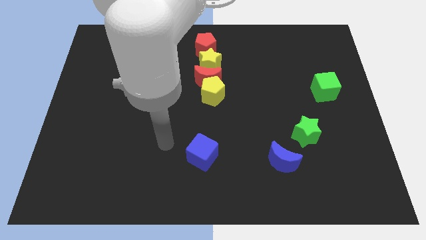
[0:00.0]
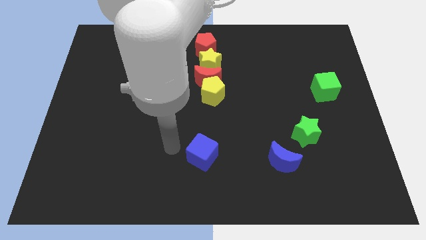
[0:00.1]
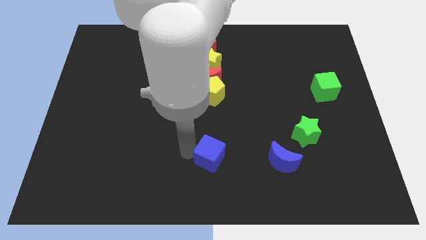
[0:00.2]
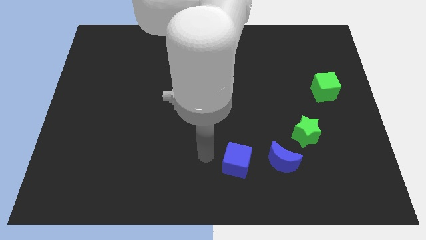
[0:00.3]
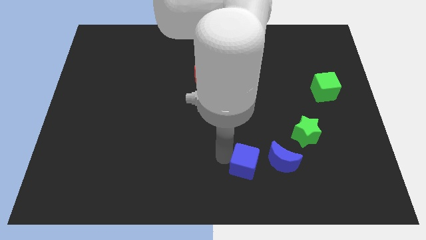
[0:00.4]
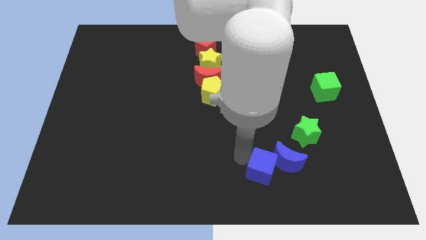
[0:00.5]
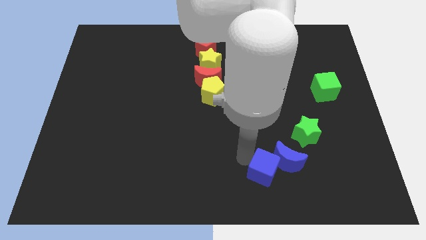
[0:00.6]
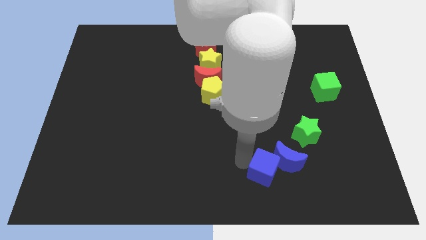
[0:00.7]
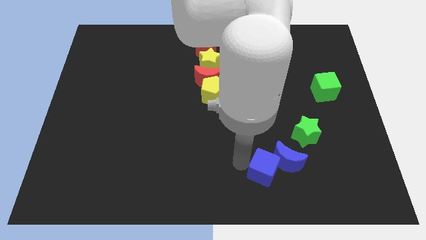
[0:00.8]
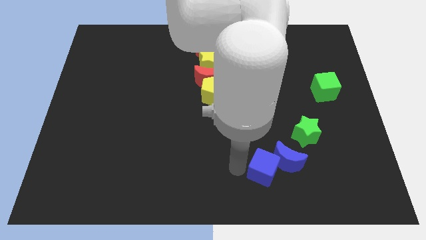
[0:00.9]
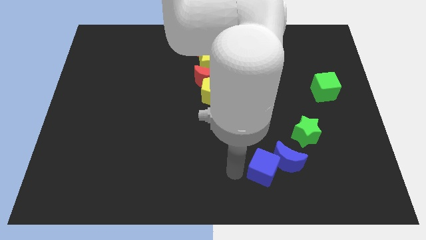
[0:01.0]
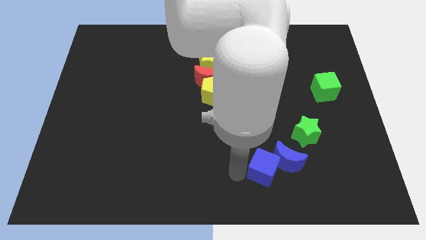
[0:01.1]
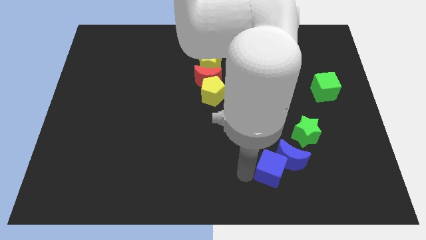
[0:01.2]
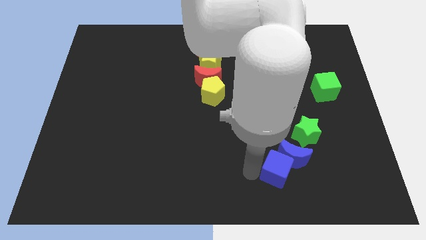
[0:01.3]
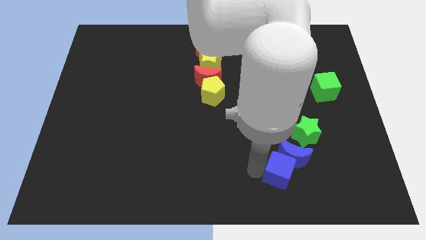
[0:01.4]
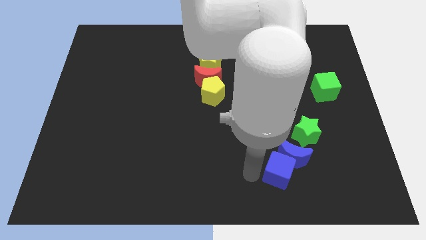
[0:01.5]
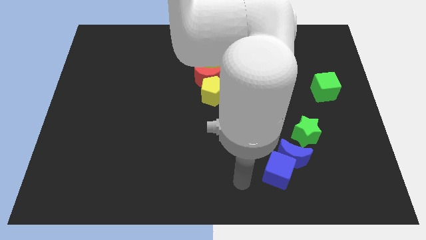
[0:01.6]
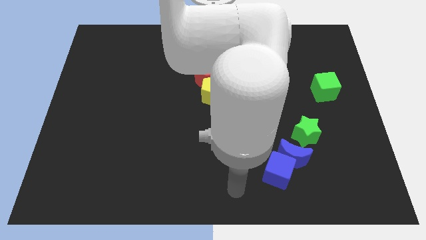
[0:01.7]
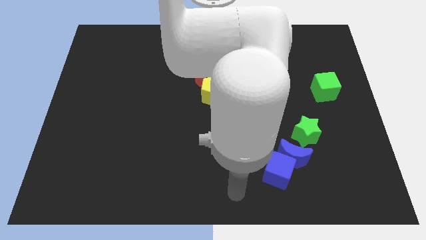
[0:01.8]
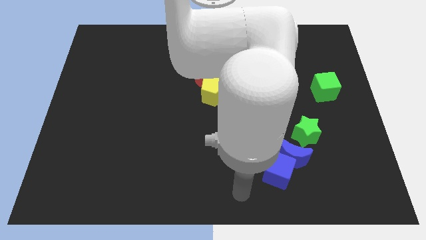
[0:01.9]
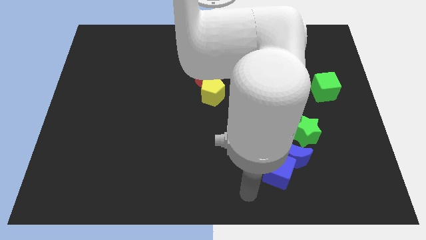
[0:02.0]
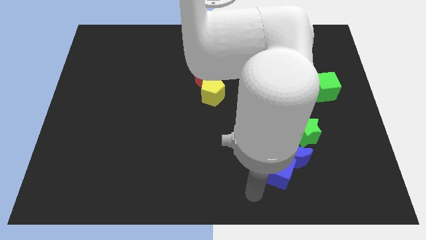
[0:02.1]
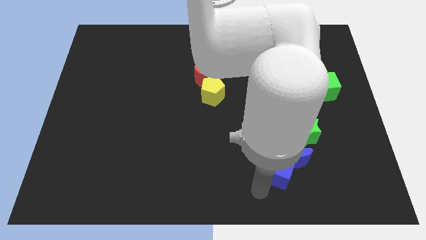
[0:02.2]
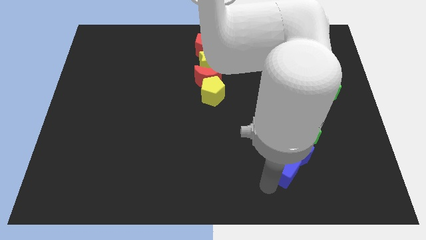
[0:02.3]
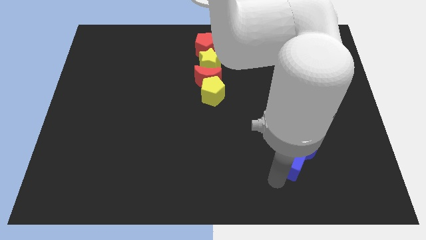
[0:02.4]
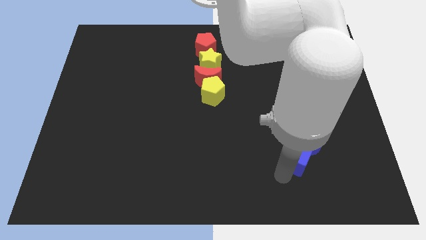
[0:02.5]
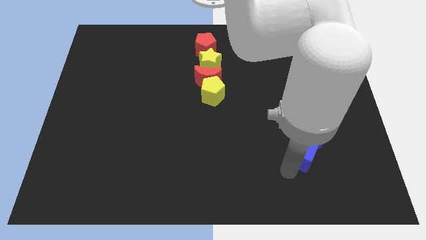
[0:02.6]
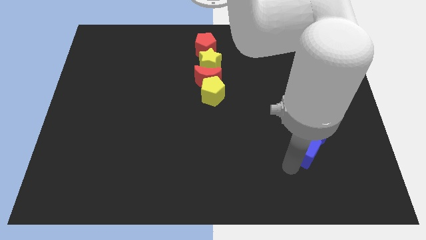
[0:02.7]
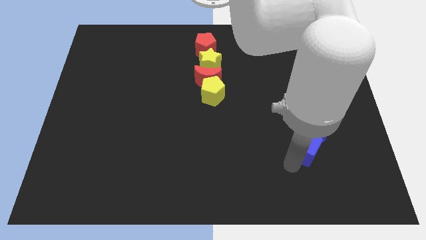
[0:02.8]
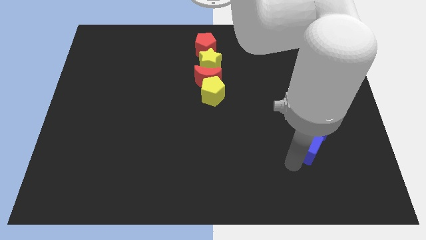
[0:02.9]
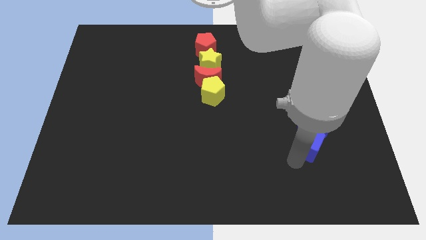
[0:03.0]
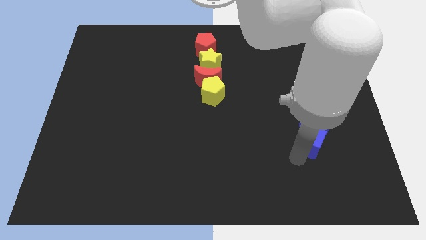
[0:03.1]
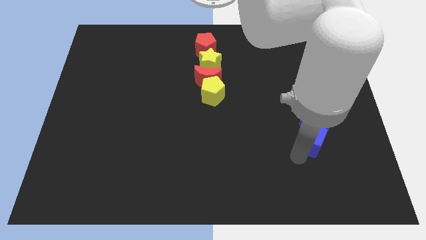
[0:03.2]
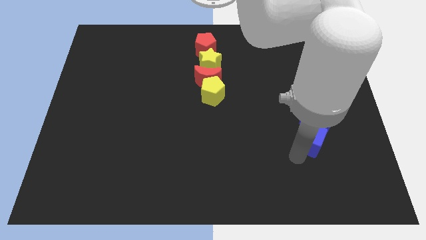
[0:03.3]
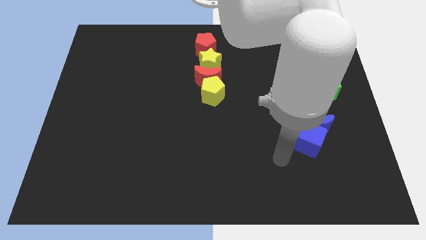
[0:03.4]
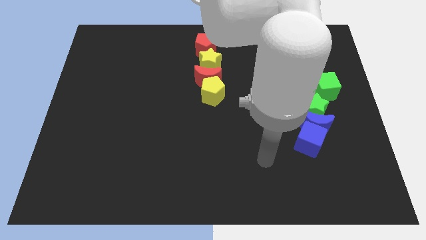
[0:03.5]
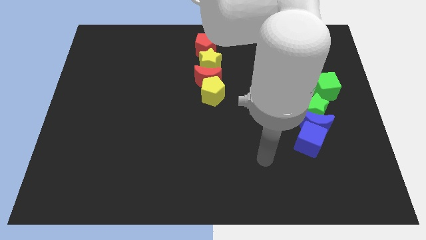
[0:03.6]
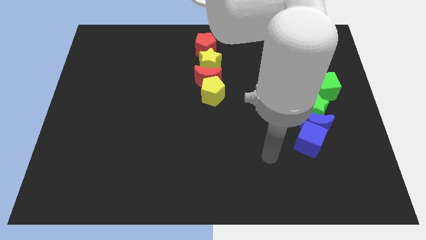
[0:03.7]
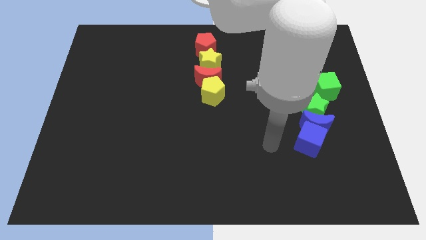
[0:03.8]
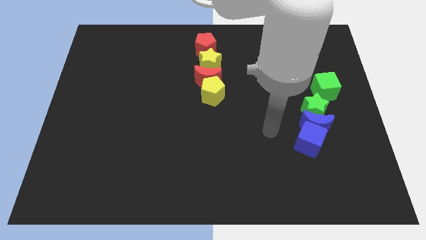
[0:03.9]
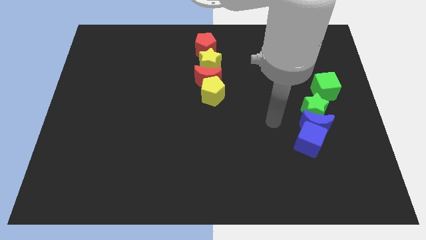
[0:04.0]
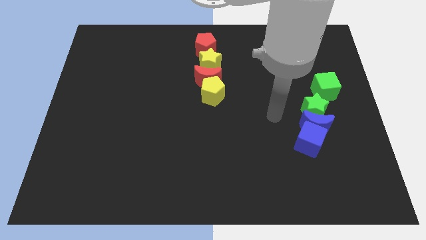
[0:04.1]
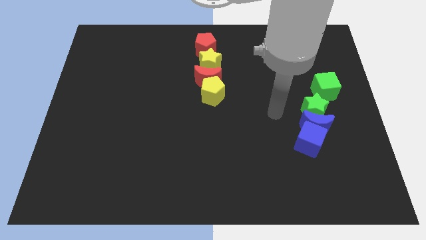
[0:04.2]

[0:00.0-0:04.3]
push the blue moon and green star upwards with the blue cube

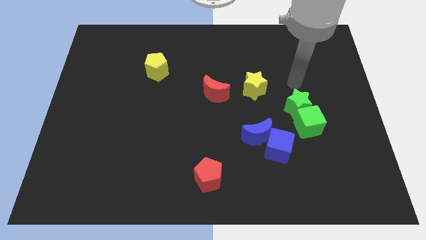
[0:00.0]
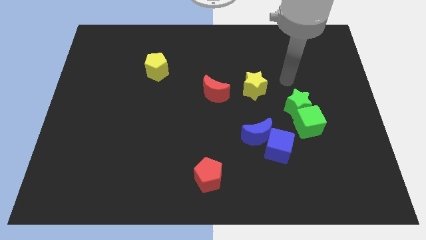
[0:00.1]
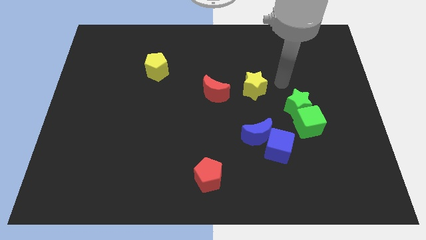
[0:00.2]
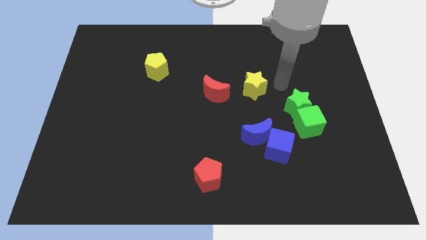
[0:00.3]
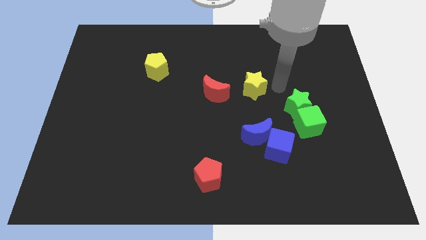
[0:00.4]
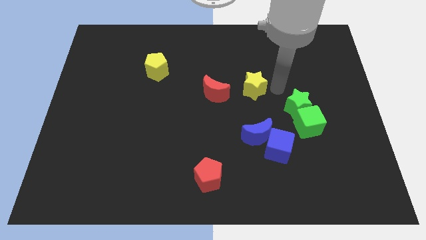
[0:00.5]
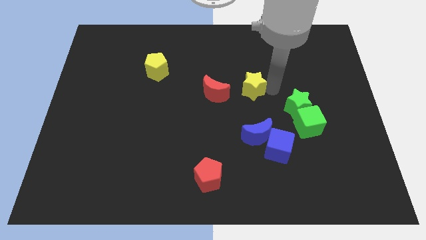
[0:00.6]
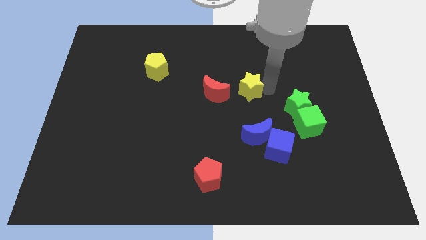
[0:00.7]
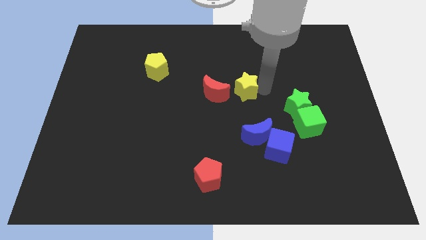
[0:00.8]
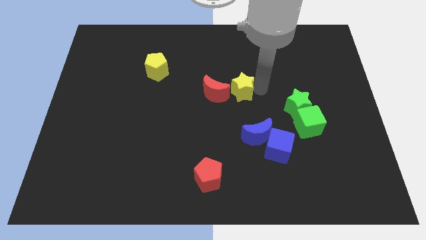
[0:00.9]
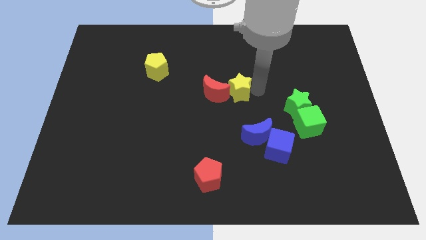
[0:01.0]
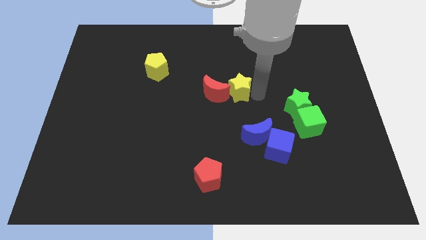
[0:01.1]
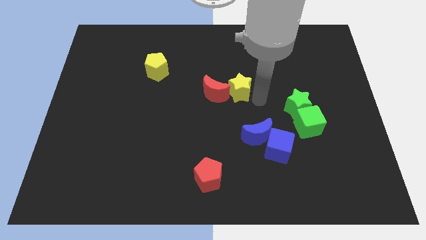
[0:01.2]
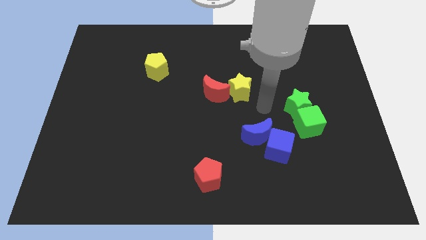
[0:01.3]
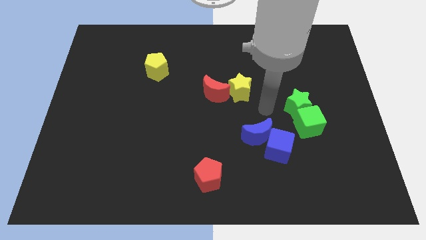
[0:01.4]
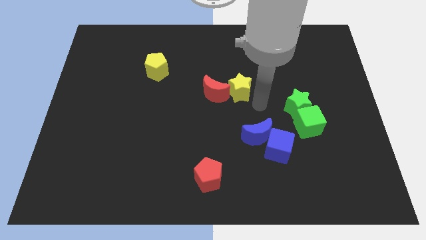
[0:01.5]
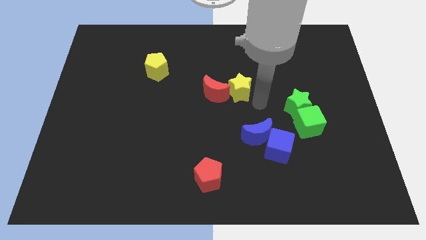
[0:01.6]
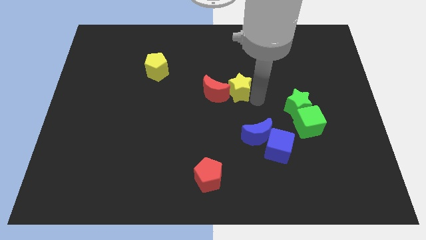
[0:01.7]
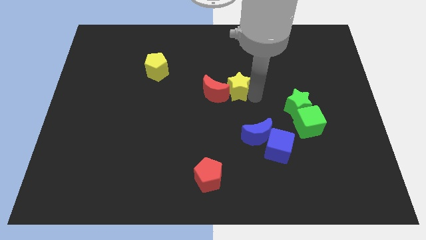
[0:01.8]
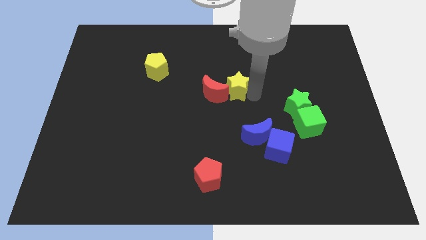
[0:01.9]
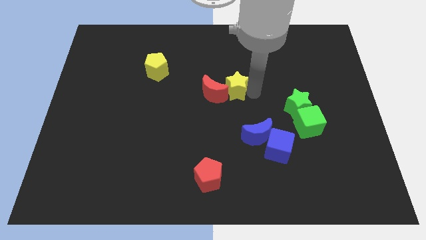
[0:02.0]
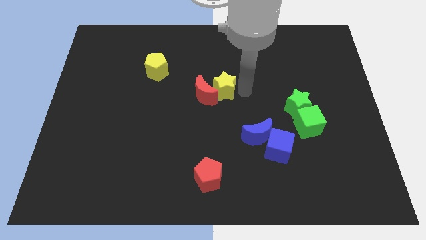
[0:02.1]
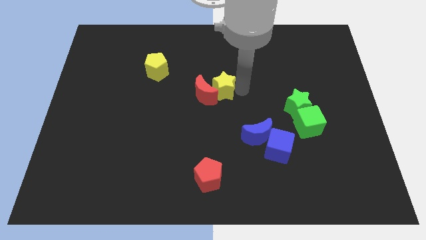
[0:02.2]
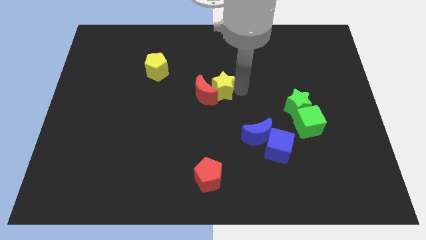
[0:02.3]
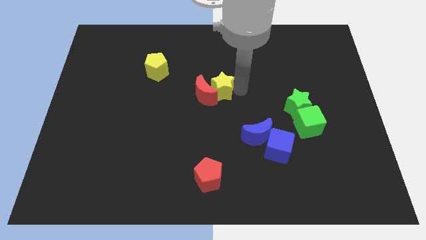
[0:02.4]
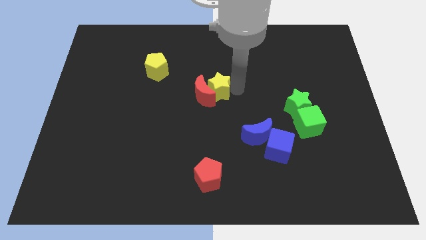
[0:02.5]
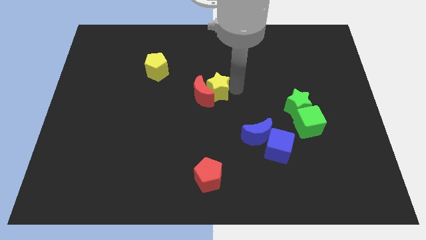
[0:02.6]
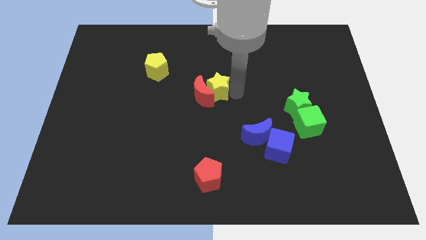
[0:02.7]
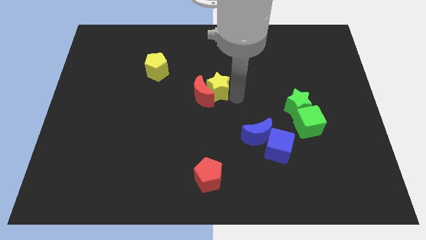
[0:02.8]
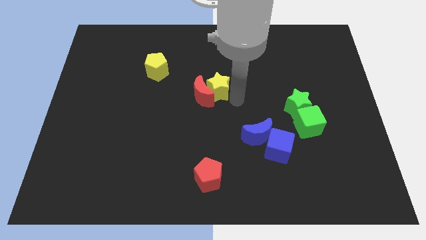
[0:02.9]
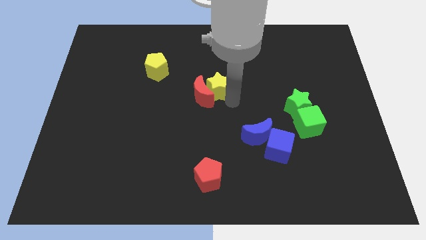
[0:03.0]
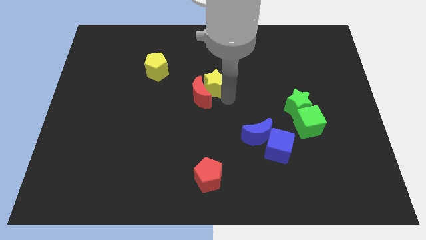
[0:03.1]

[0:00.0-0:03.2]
move the yellow star into the red crescent

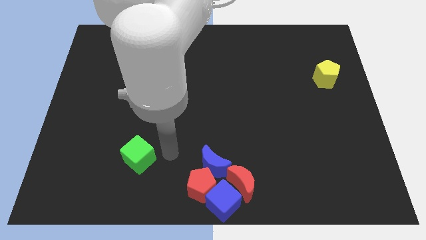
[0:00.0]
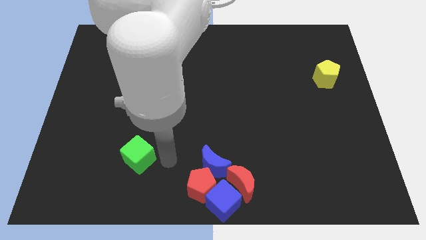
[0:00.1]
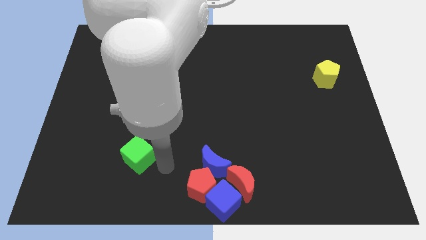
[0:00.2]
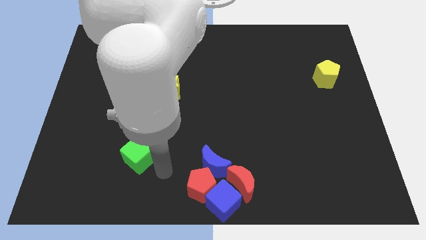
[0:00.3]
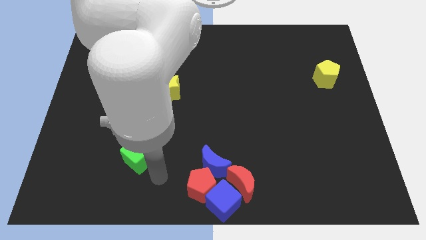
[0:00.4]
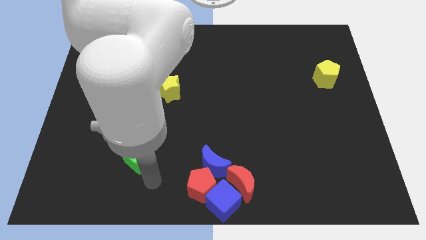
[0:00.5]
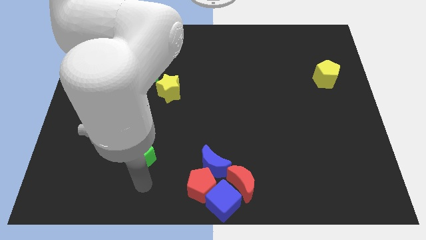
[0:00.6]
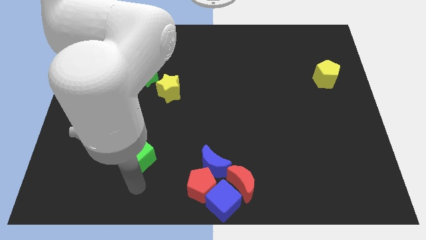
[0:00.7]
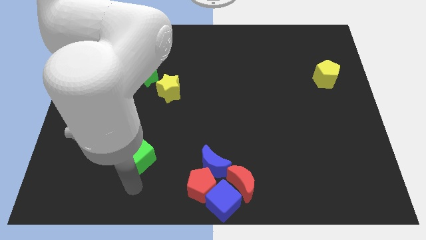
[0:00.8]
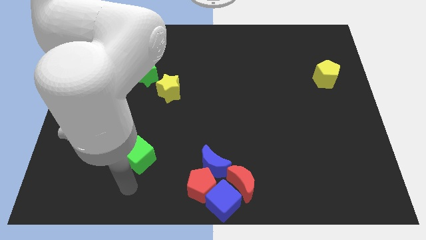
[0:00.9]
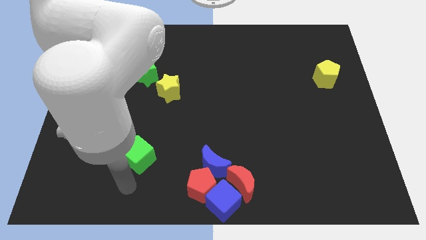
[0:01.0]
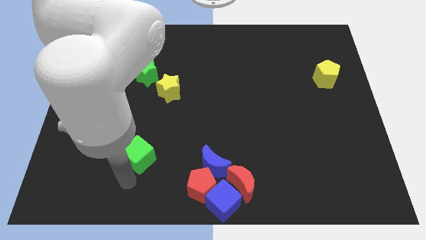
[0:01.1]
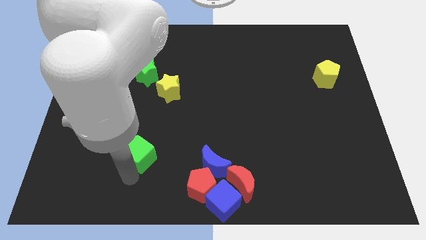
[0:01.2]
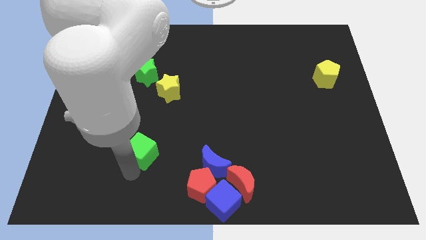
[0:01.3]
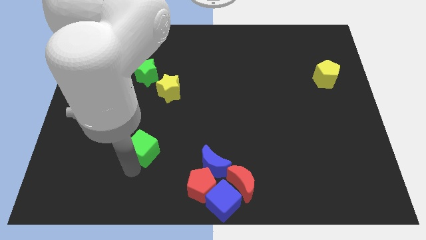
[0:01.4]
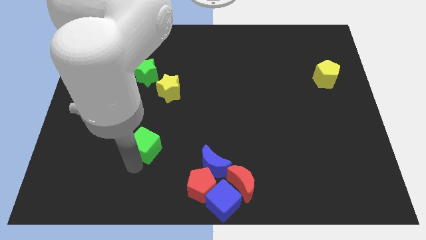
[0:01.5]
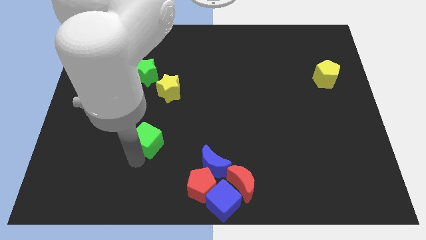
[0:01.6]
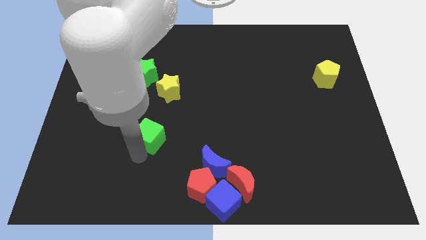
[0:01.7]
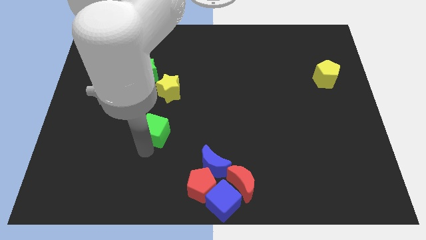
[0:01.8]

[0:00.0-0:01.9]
push the green cube towards the yellow star
